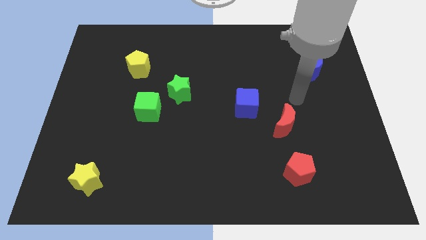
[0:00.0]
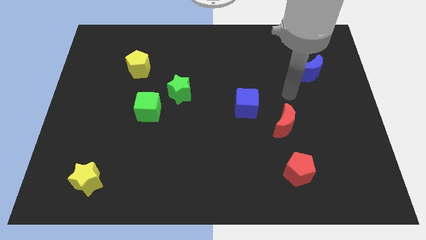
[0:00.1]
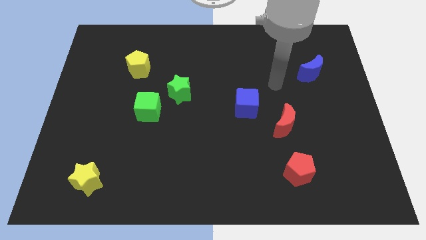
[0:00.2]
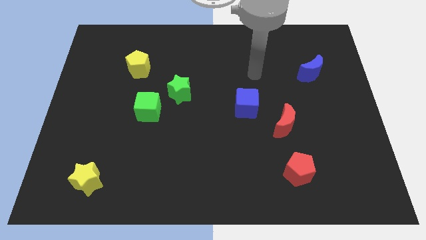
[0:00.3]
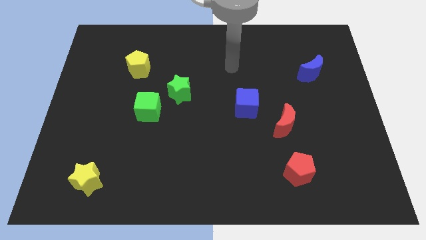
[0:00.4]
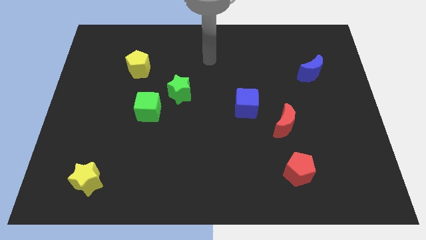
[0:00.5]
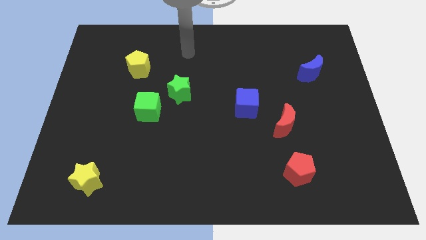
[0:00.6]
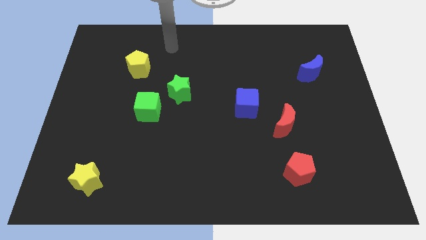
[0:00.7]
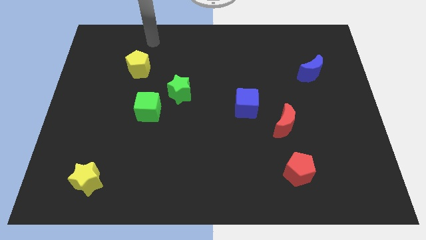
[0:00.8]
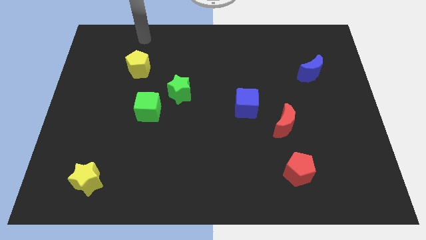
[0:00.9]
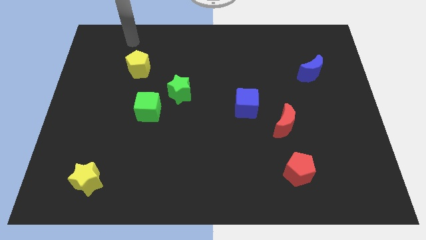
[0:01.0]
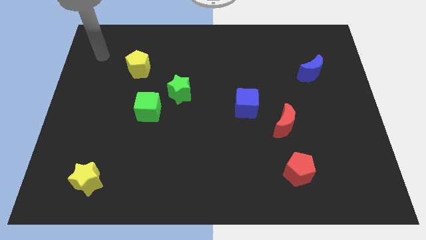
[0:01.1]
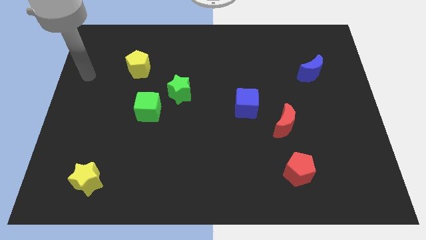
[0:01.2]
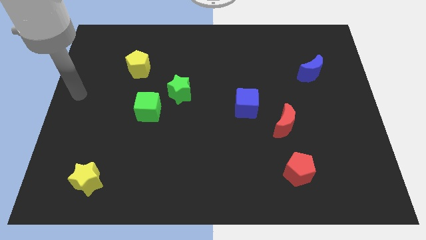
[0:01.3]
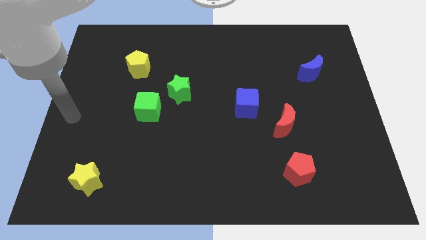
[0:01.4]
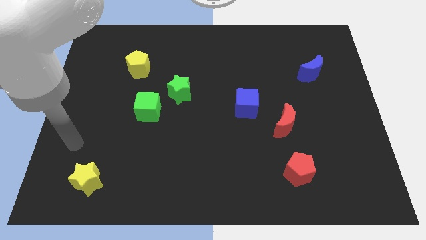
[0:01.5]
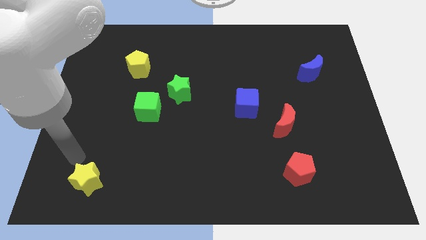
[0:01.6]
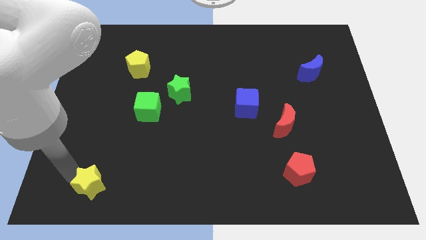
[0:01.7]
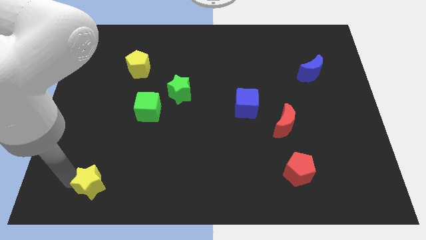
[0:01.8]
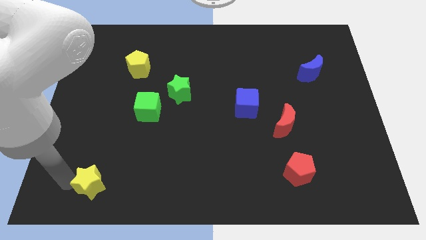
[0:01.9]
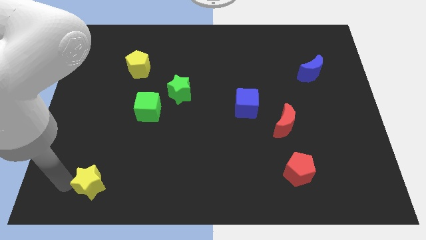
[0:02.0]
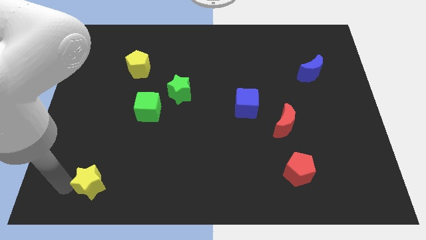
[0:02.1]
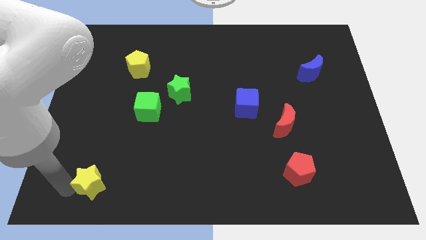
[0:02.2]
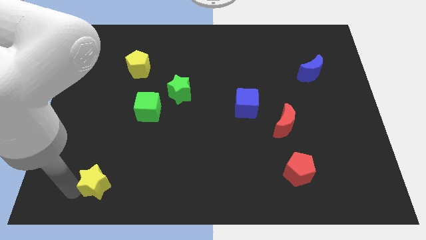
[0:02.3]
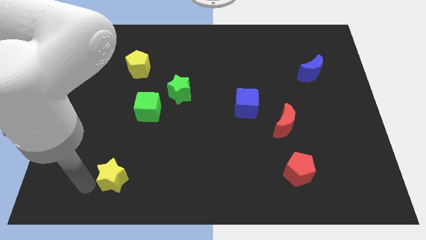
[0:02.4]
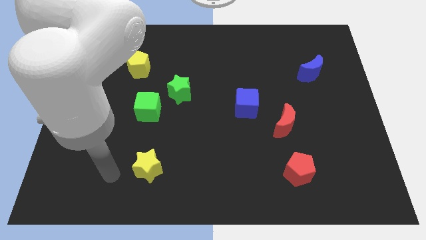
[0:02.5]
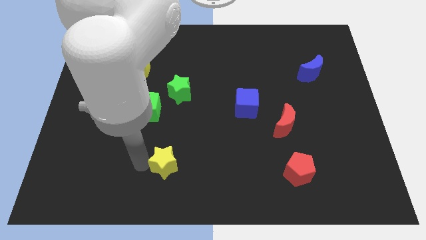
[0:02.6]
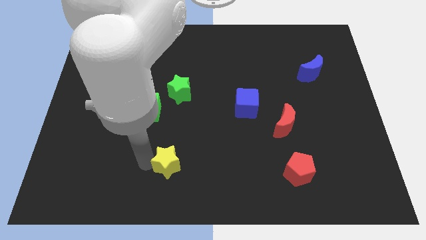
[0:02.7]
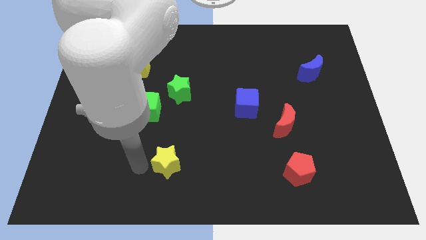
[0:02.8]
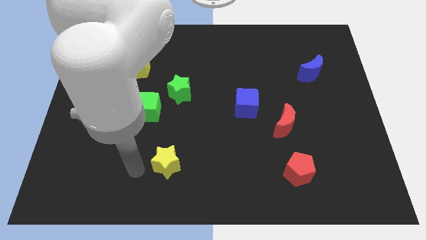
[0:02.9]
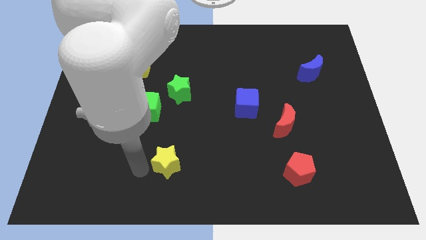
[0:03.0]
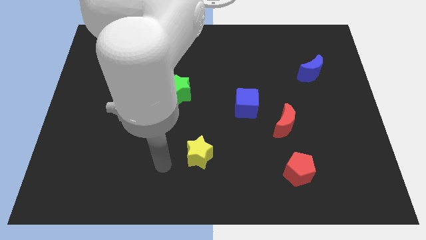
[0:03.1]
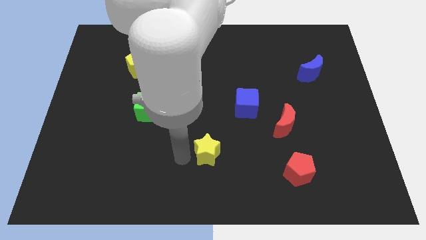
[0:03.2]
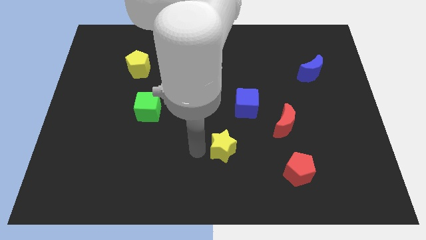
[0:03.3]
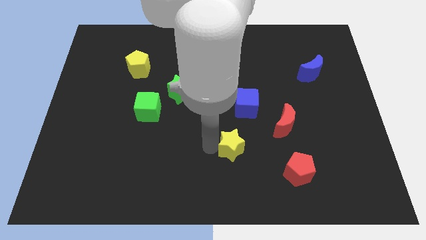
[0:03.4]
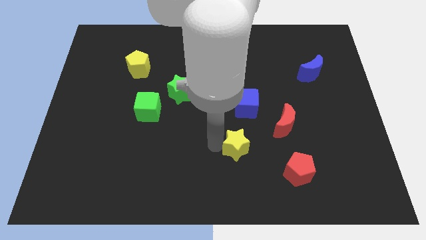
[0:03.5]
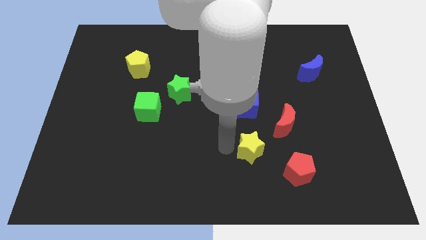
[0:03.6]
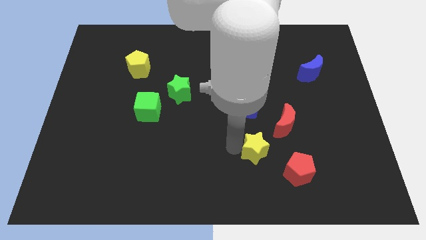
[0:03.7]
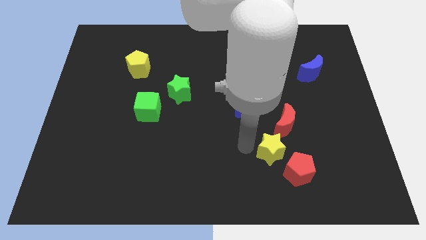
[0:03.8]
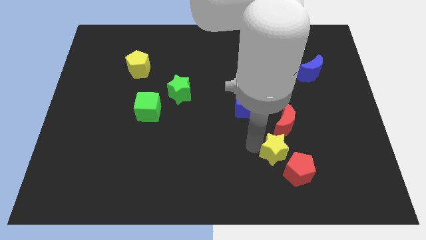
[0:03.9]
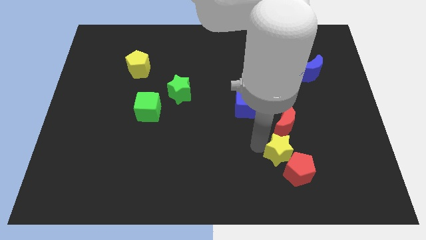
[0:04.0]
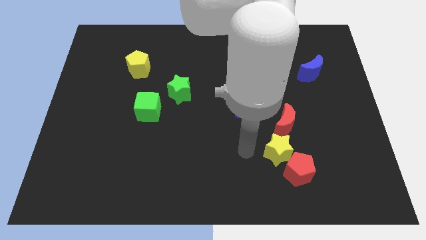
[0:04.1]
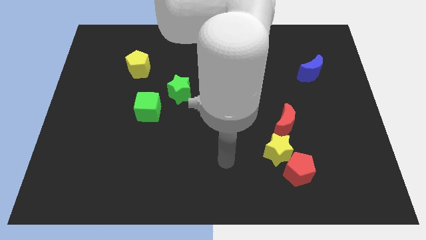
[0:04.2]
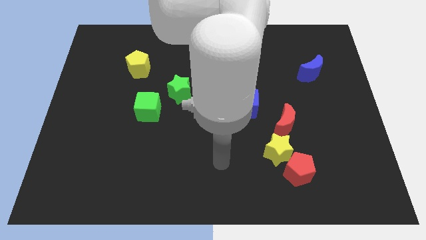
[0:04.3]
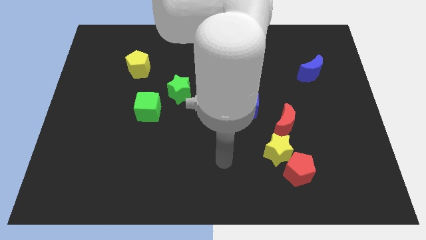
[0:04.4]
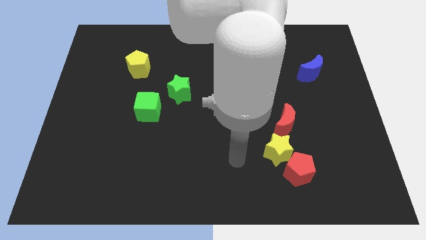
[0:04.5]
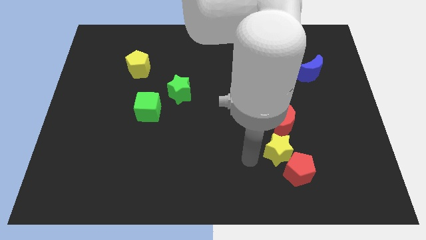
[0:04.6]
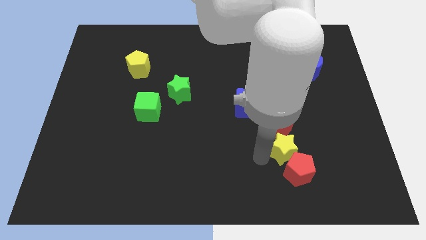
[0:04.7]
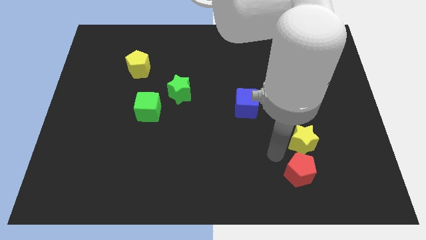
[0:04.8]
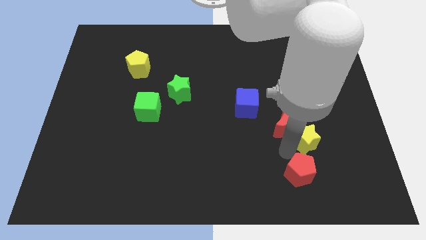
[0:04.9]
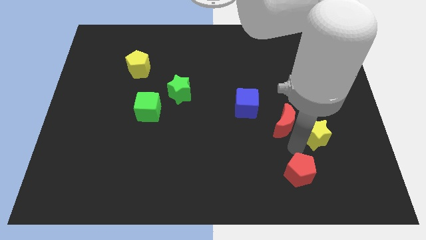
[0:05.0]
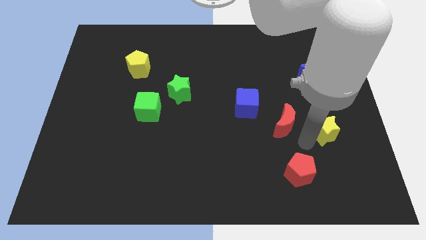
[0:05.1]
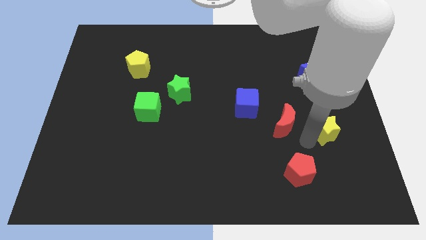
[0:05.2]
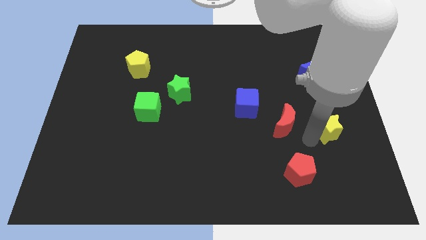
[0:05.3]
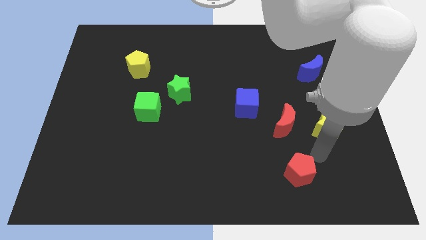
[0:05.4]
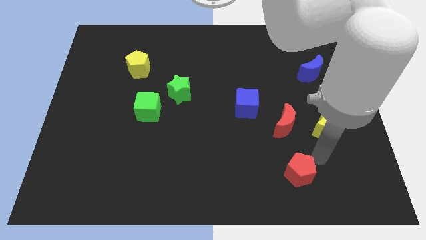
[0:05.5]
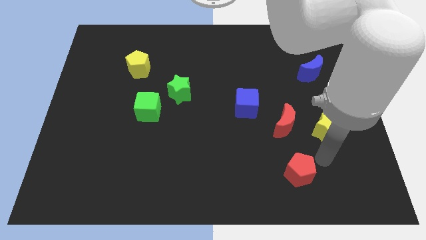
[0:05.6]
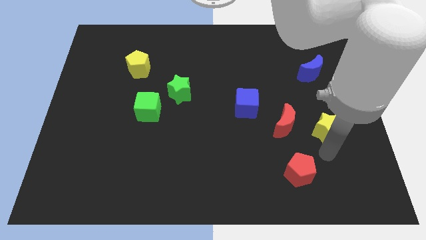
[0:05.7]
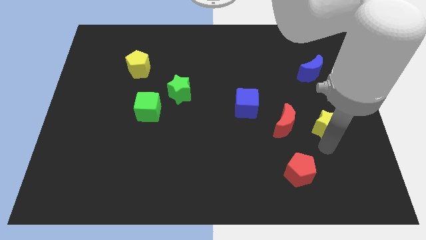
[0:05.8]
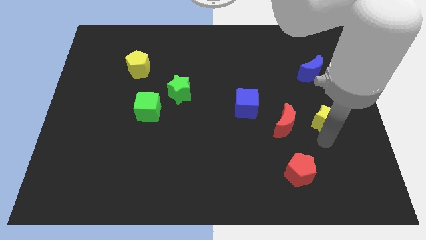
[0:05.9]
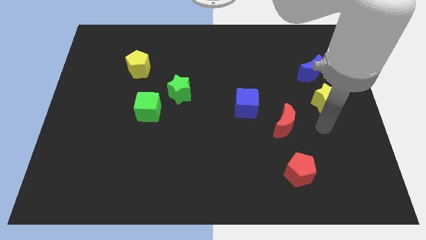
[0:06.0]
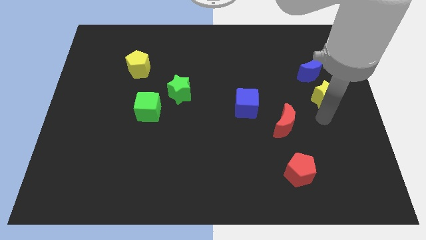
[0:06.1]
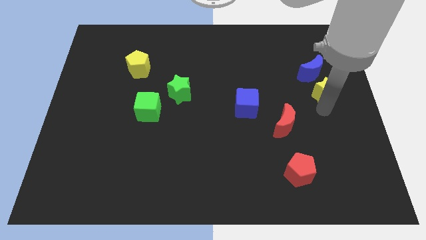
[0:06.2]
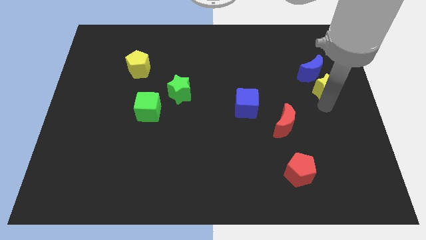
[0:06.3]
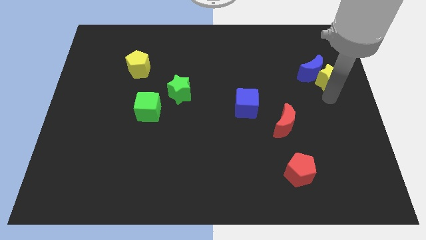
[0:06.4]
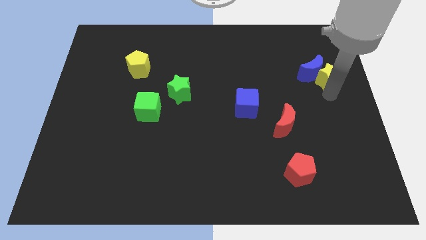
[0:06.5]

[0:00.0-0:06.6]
move the yellow star towards the blue moon

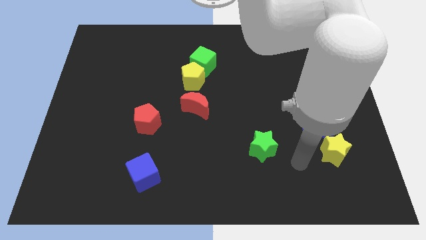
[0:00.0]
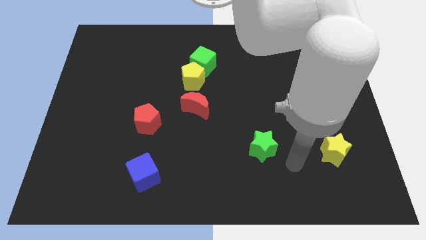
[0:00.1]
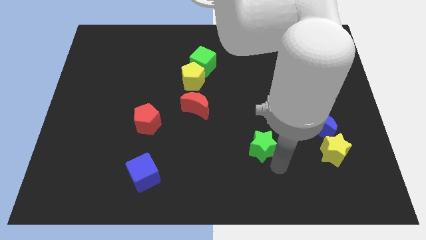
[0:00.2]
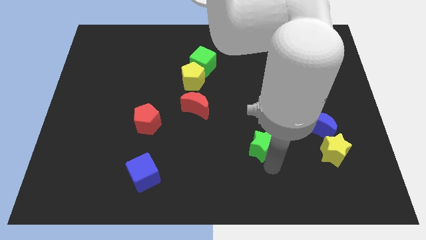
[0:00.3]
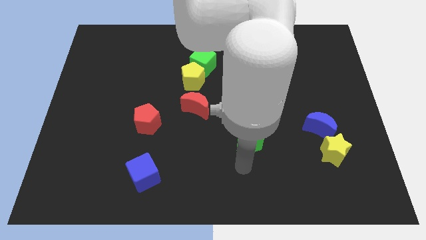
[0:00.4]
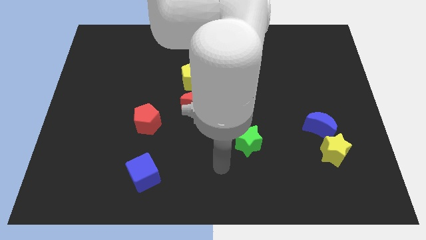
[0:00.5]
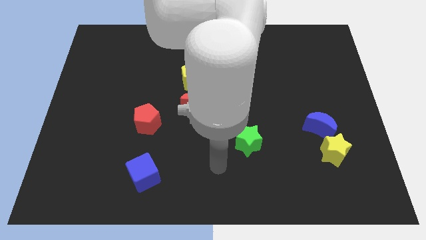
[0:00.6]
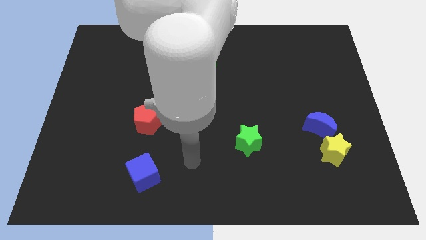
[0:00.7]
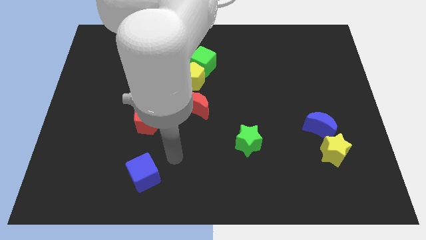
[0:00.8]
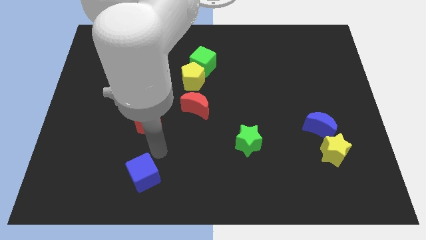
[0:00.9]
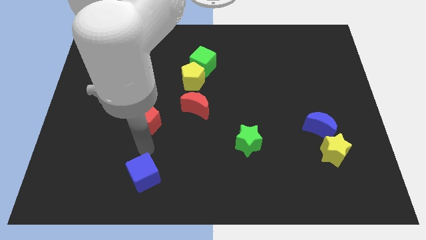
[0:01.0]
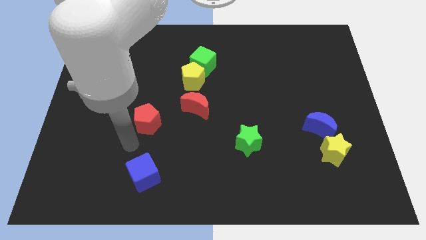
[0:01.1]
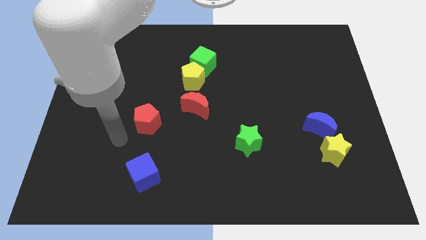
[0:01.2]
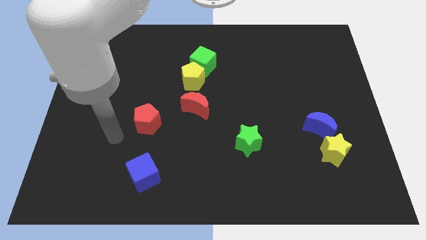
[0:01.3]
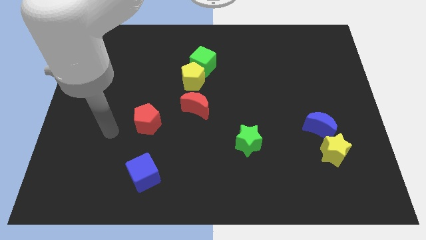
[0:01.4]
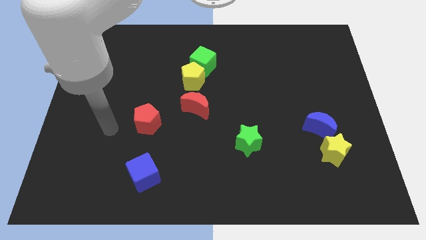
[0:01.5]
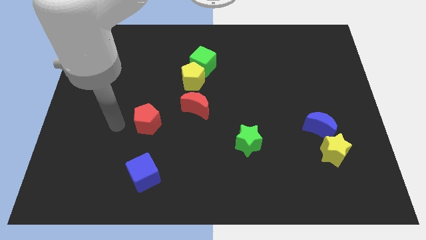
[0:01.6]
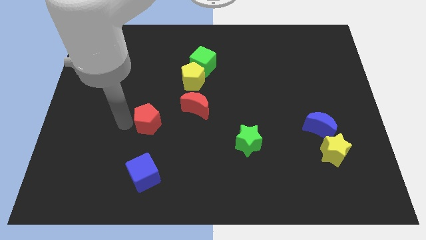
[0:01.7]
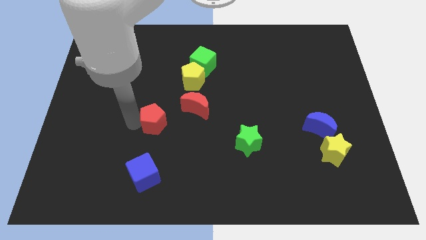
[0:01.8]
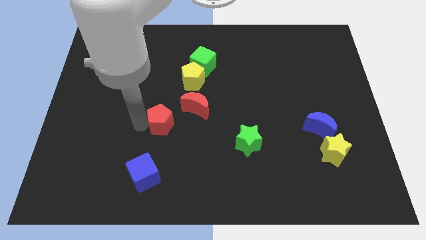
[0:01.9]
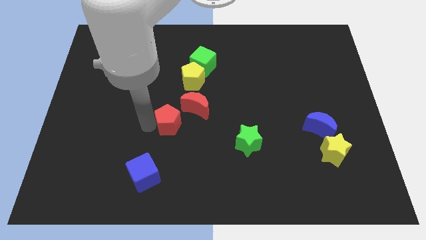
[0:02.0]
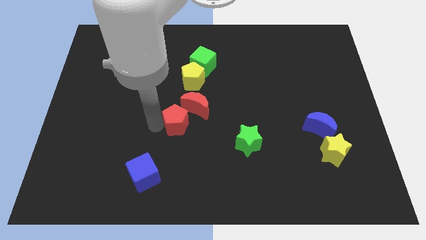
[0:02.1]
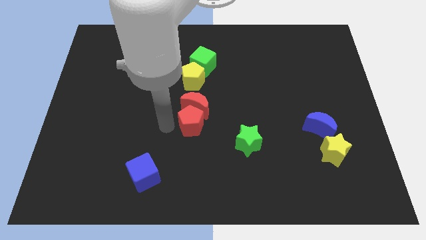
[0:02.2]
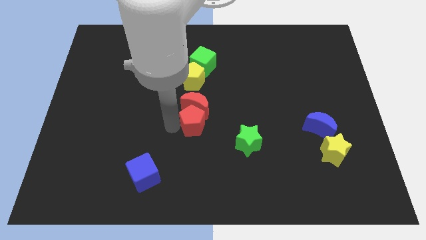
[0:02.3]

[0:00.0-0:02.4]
slide the red pentagon to the red moon
